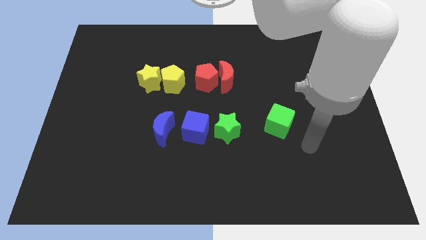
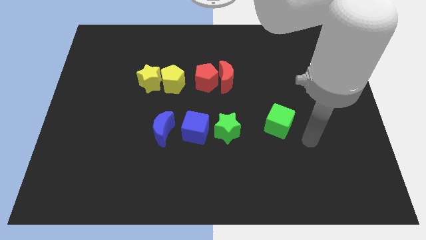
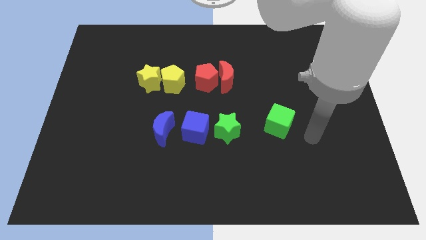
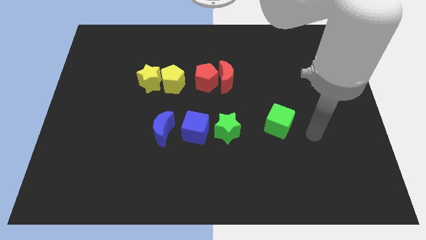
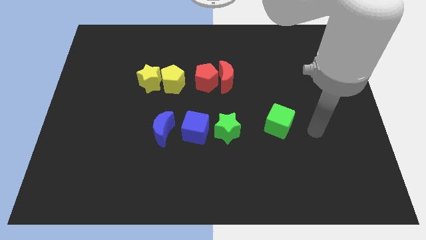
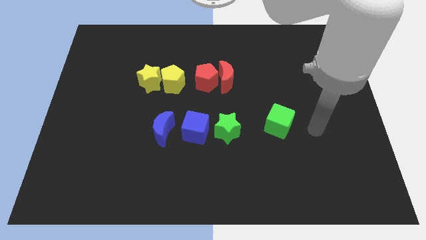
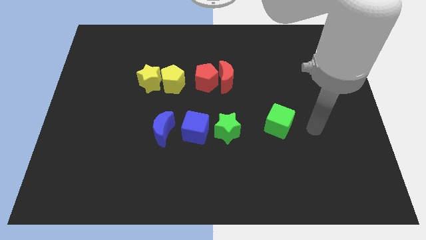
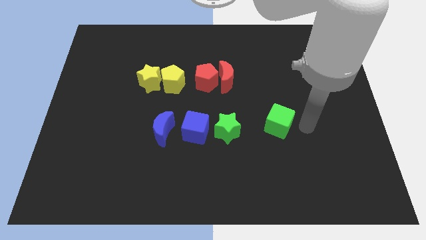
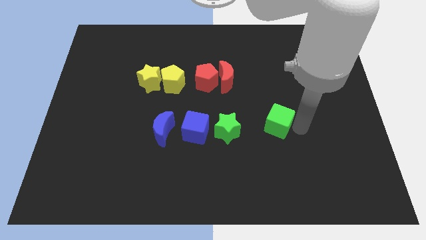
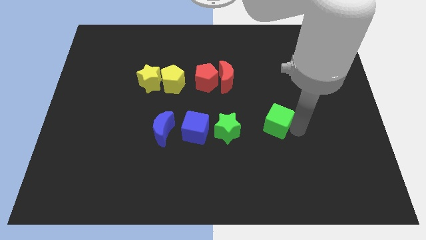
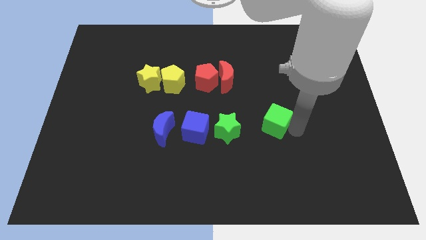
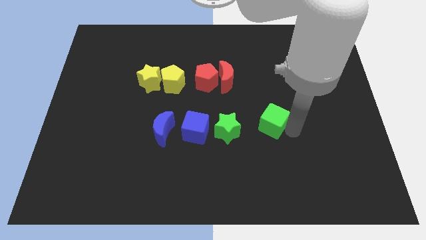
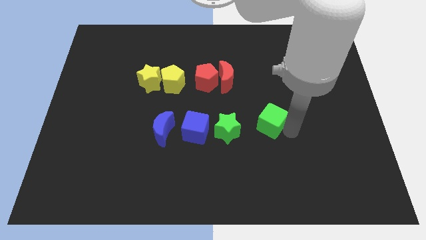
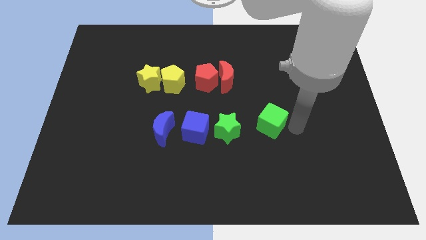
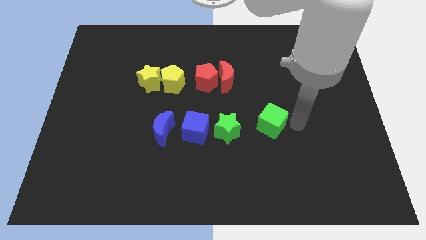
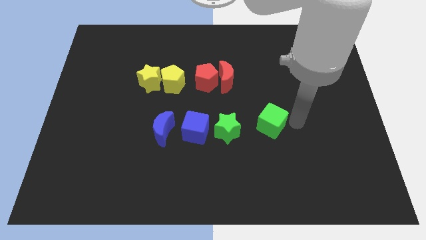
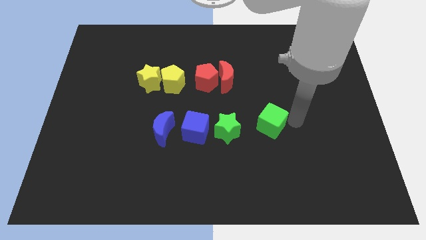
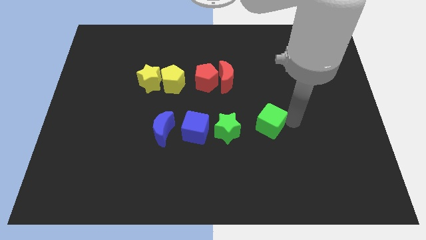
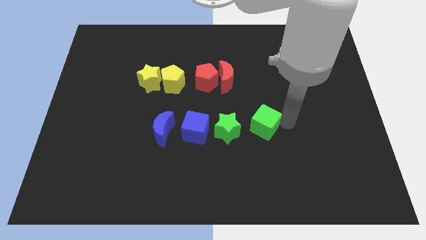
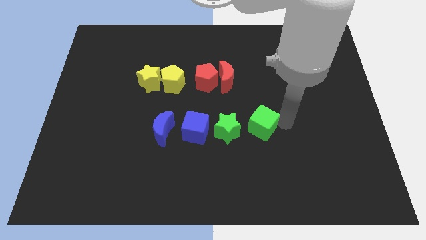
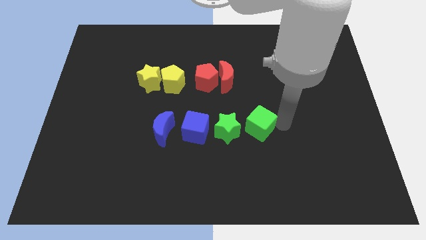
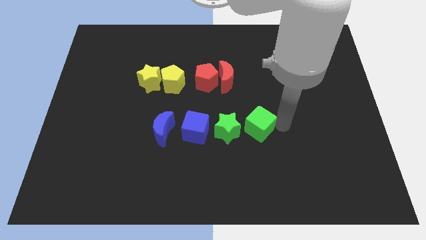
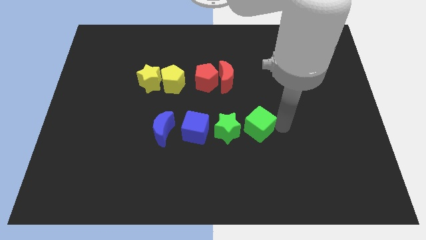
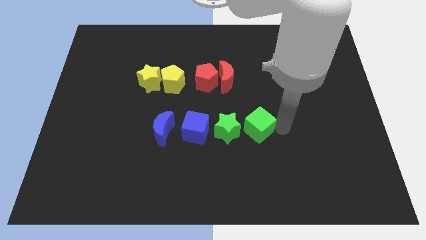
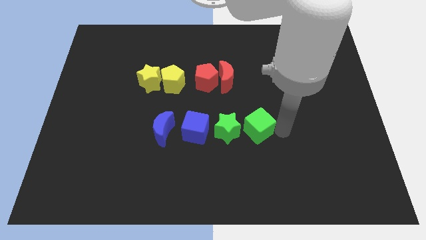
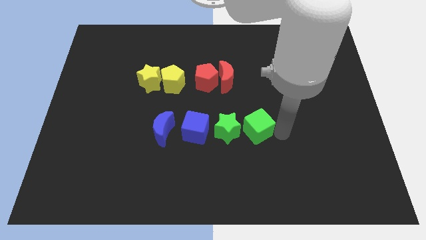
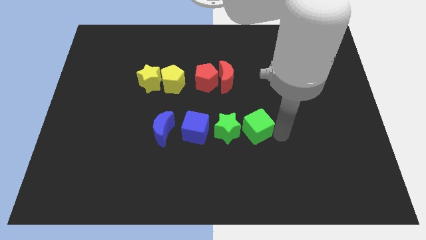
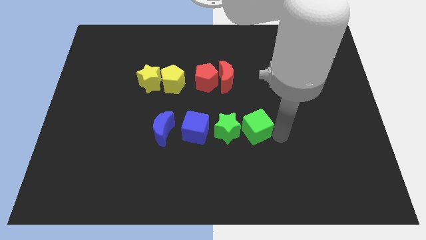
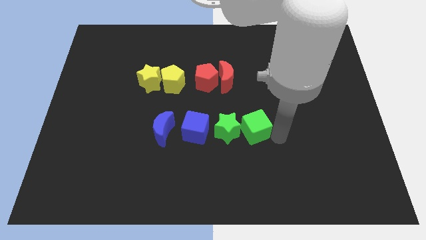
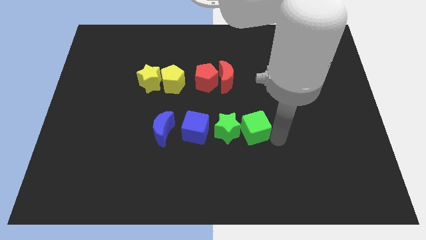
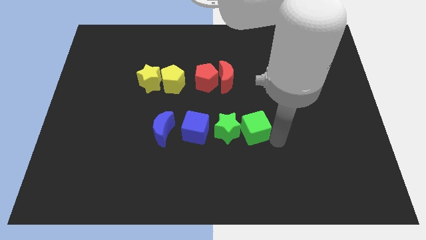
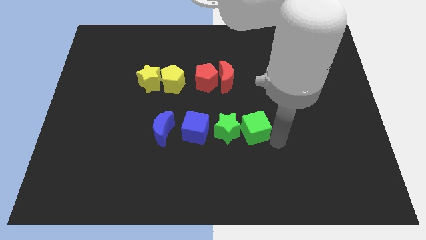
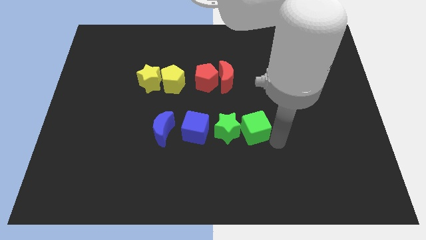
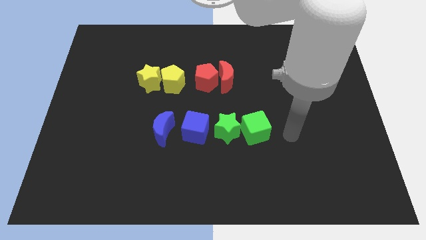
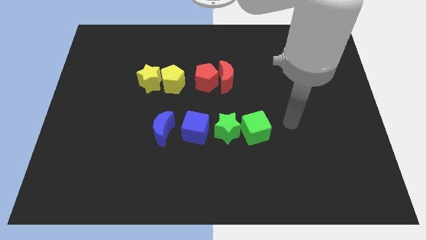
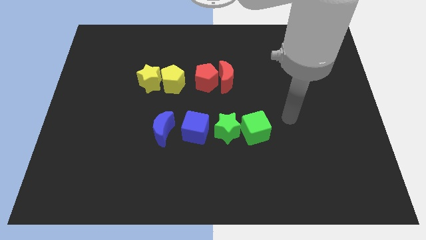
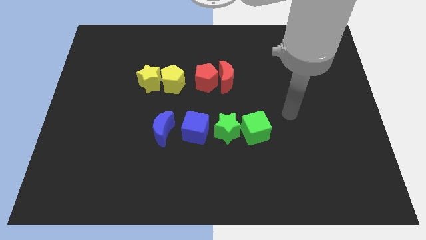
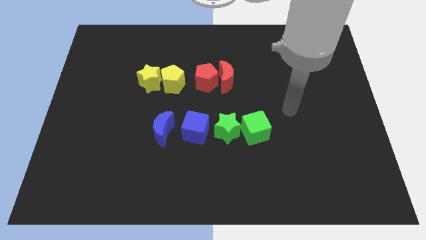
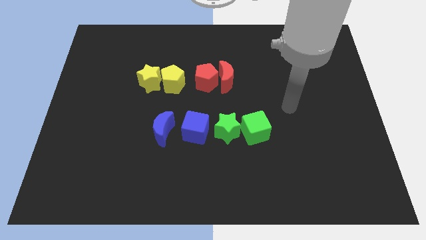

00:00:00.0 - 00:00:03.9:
place the green cube right to the green star to form a horizontal line

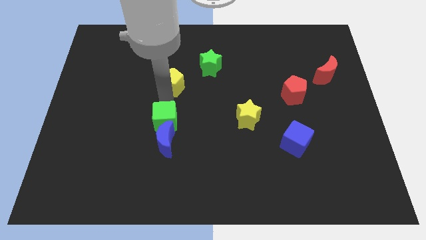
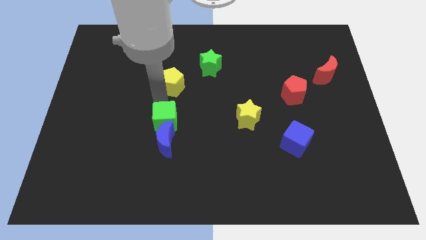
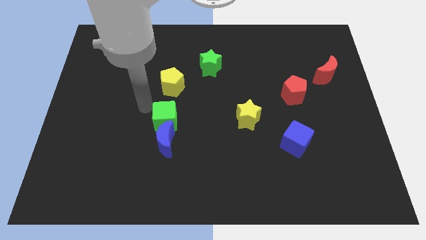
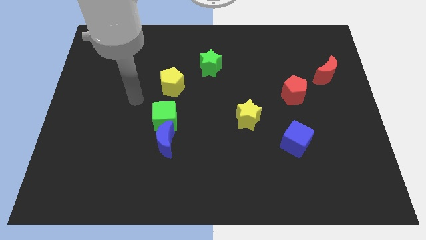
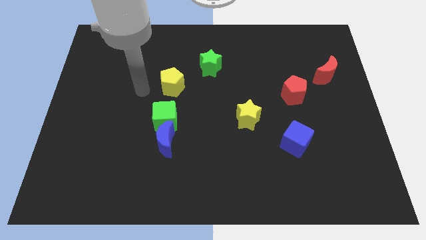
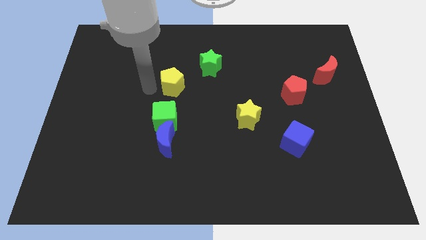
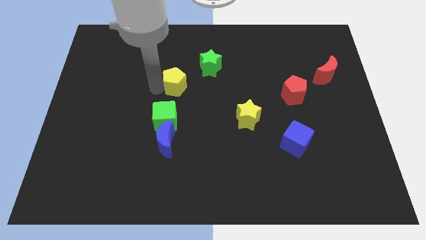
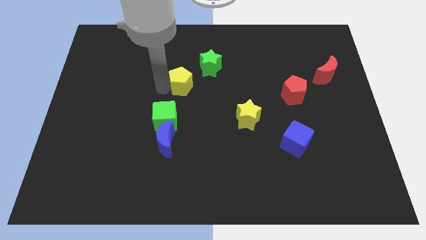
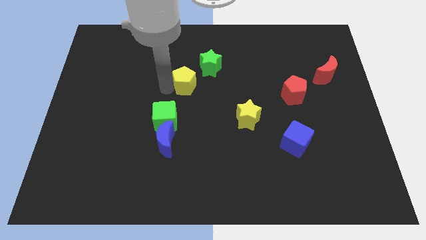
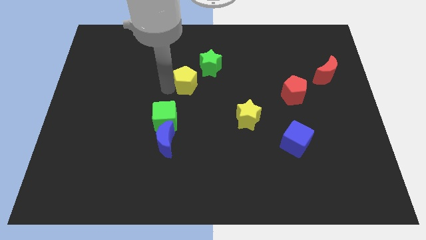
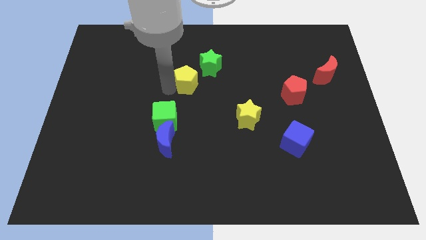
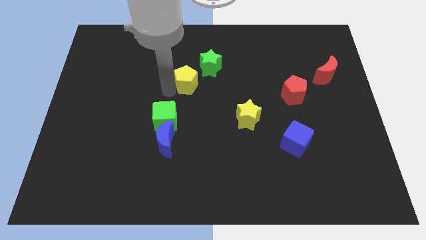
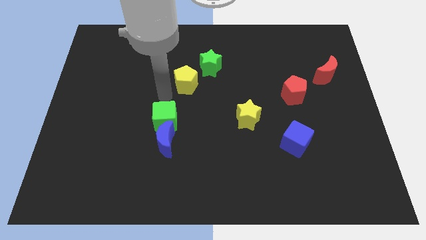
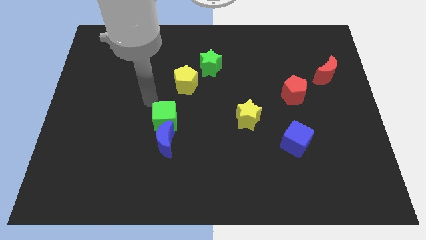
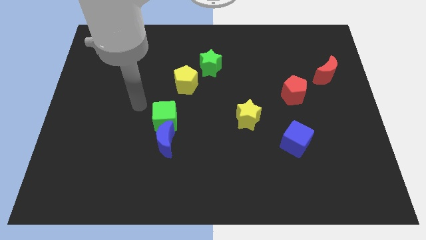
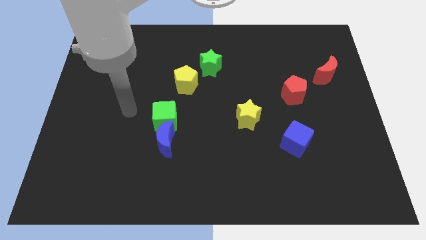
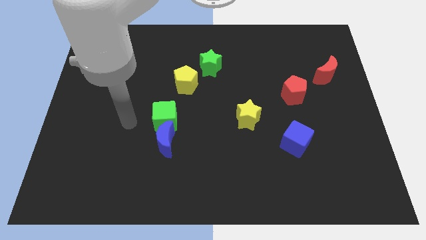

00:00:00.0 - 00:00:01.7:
drag the yellow pentagon towards the green star

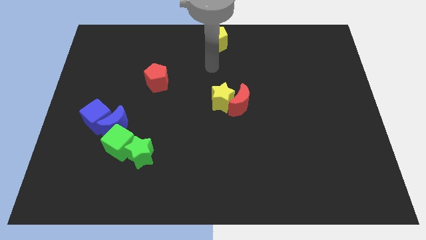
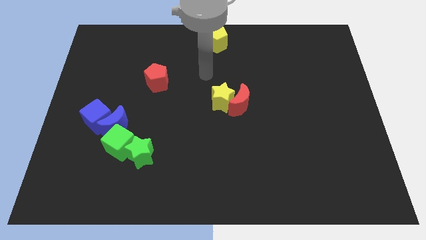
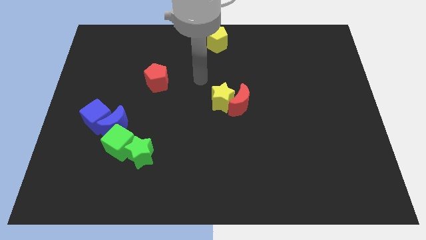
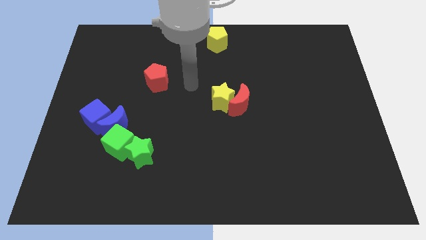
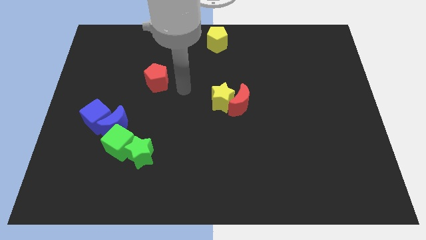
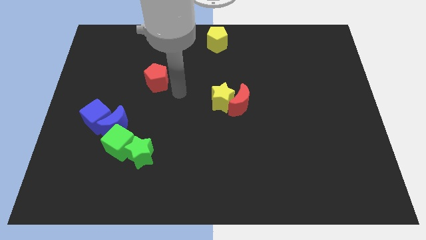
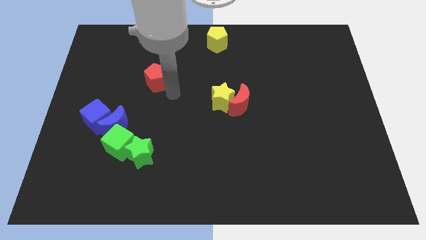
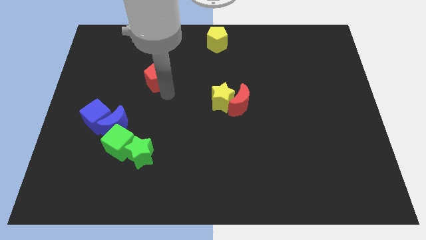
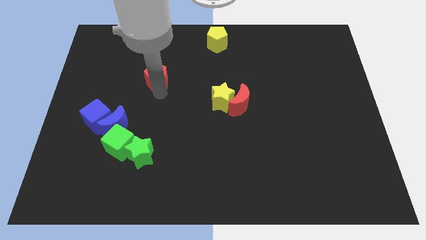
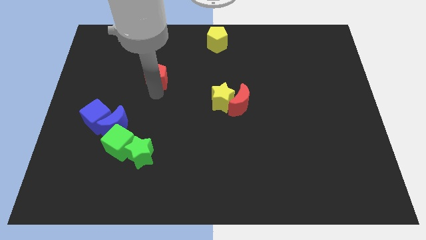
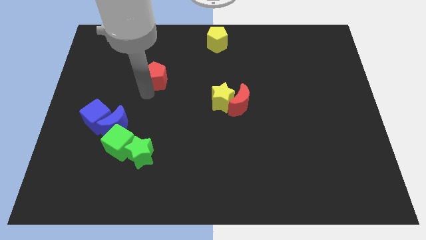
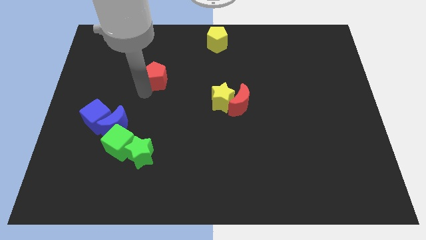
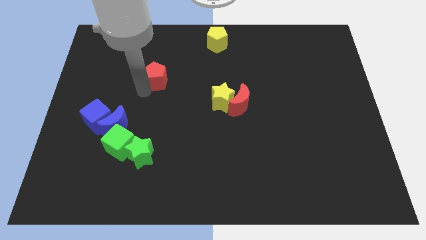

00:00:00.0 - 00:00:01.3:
move your arm to the bottom of red pentagon

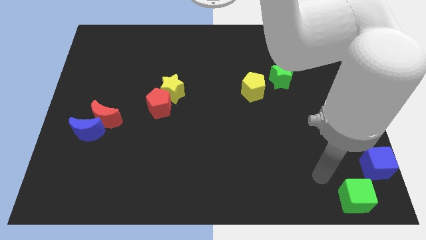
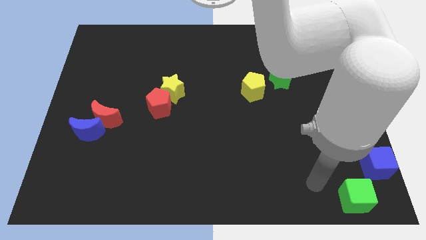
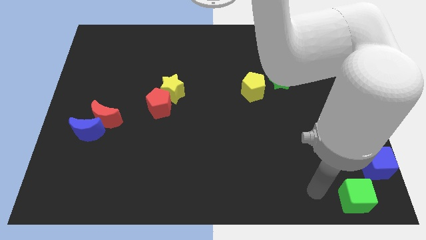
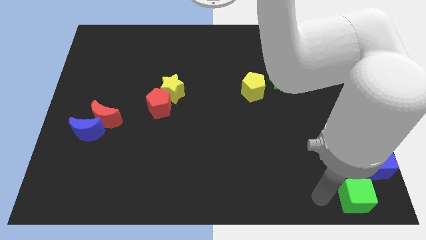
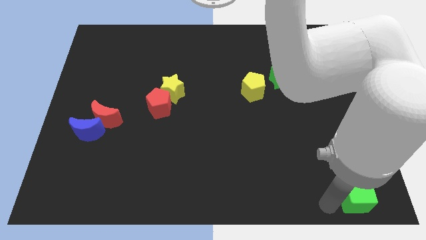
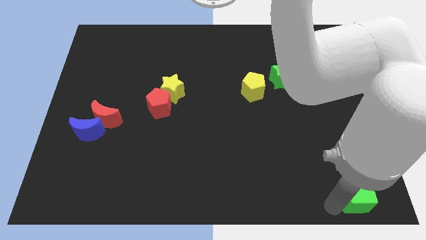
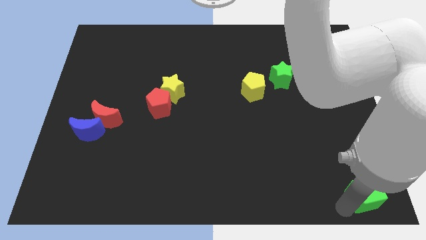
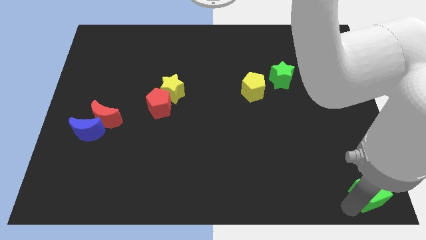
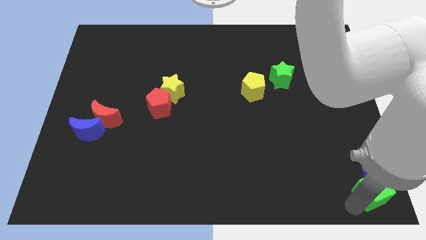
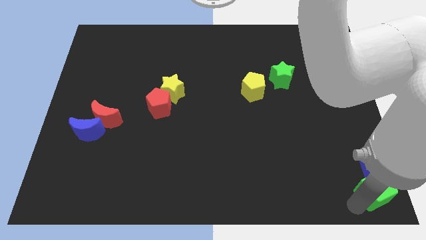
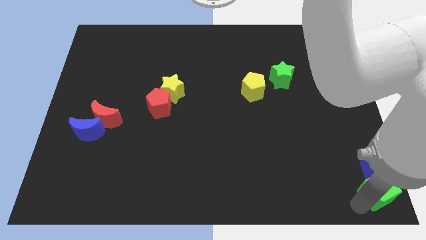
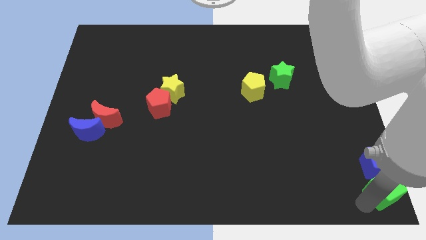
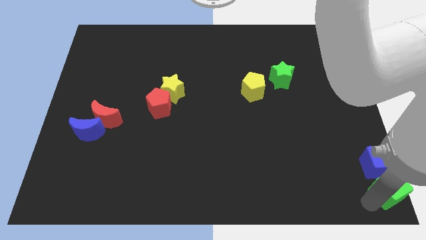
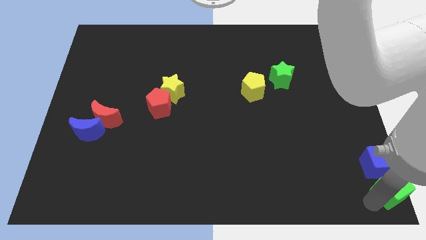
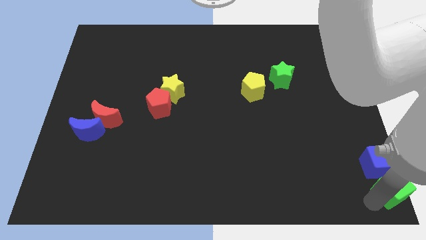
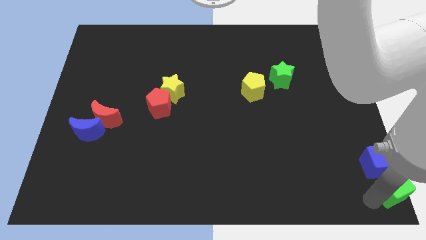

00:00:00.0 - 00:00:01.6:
push the green cube below the blue cube

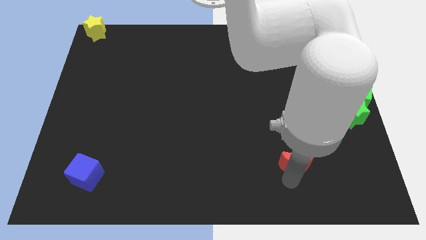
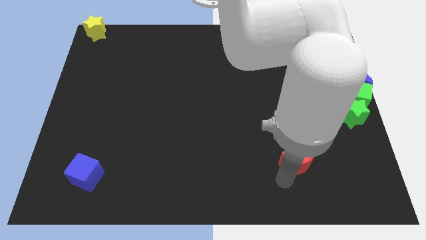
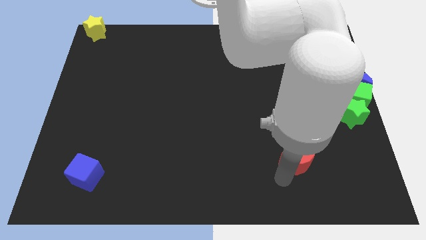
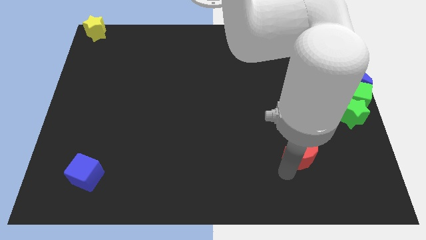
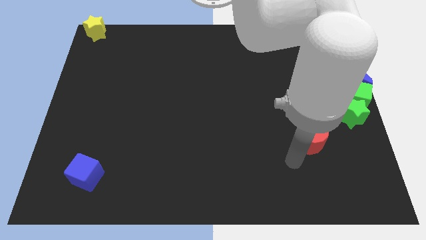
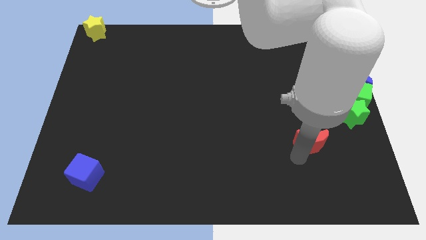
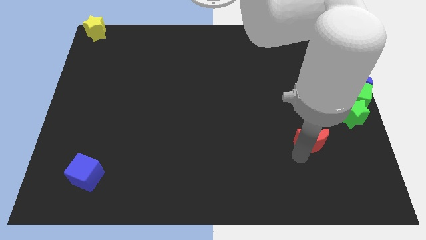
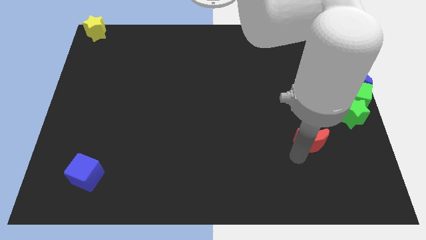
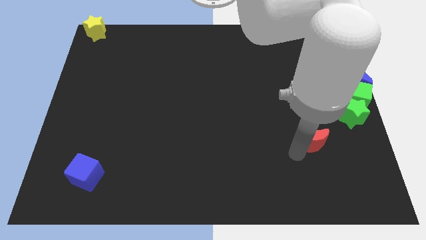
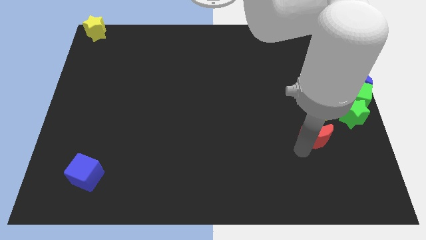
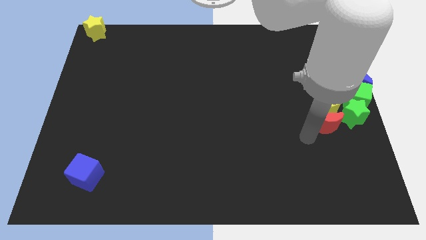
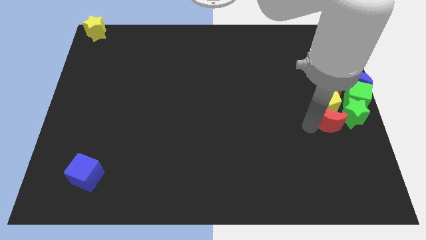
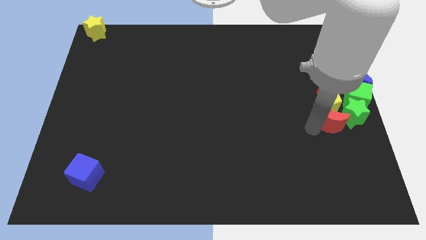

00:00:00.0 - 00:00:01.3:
place the red crescent below the yellow pentagon
